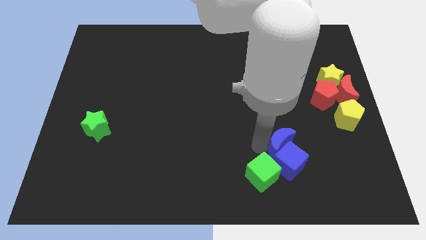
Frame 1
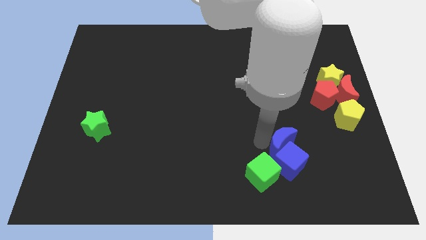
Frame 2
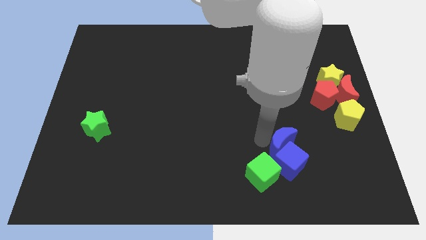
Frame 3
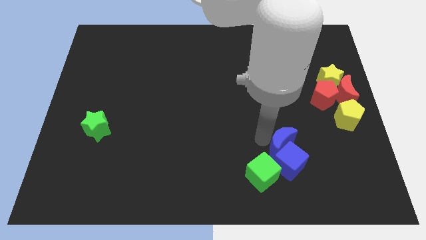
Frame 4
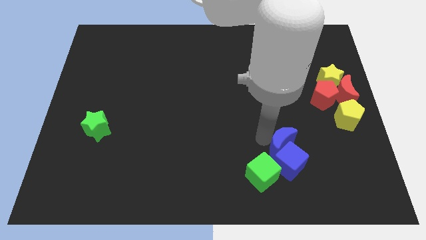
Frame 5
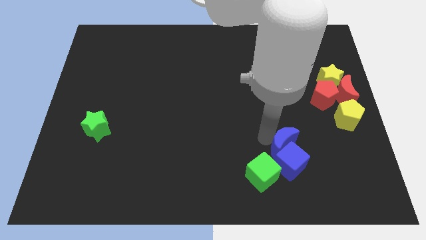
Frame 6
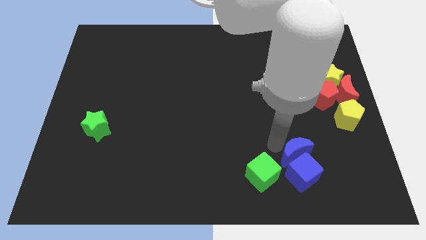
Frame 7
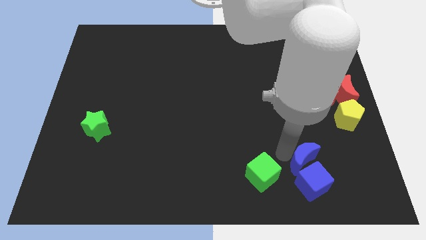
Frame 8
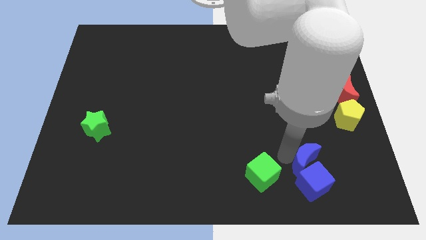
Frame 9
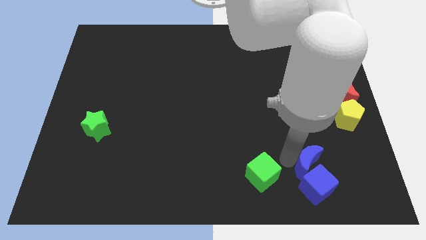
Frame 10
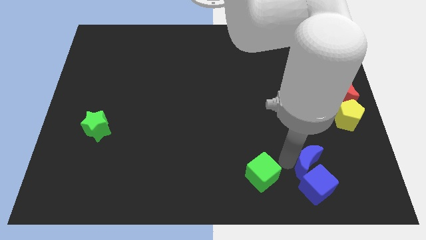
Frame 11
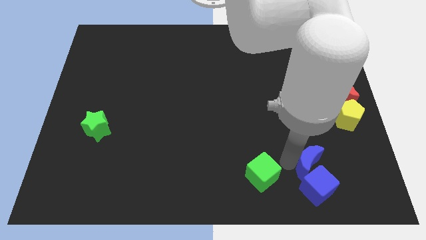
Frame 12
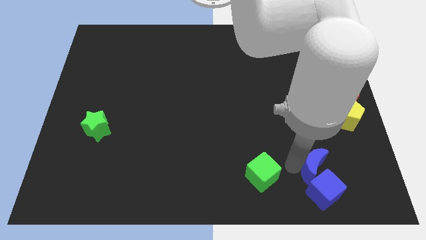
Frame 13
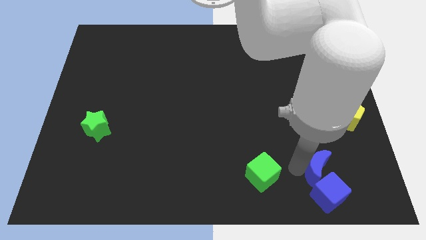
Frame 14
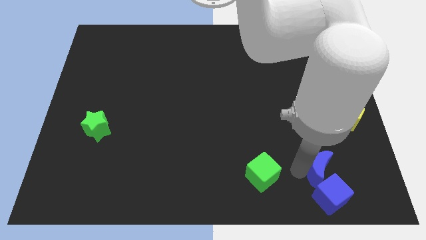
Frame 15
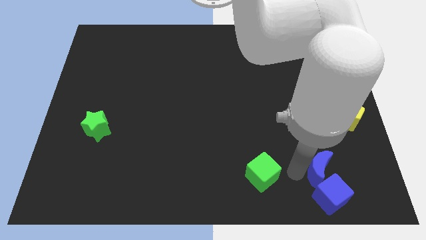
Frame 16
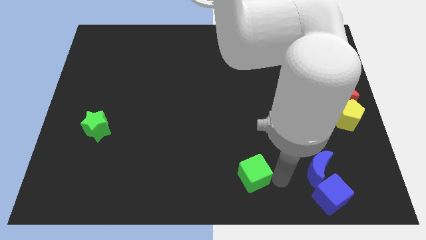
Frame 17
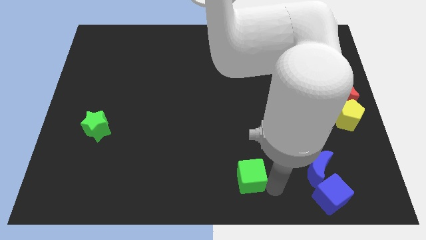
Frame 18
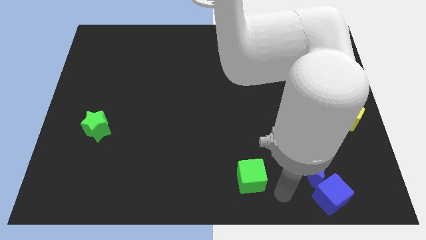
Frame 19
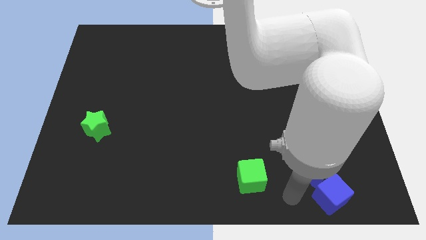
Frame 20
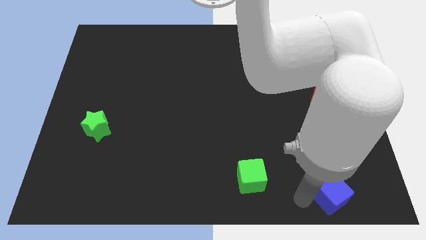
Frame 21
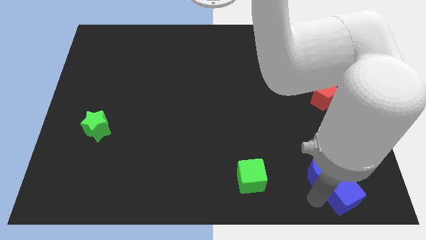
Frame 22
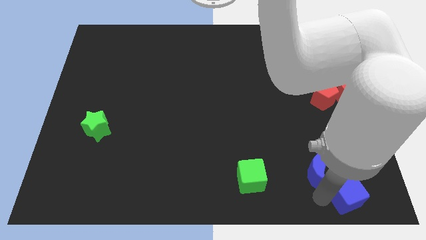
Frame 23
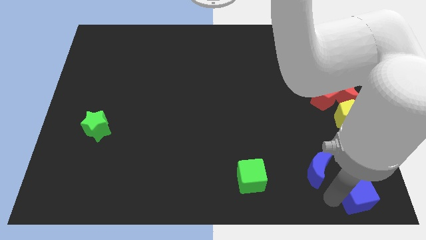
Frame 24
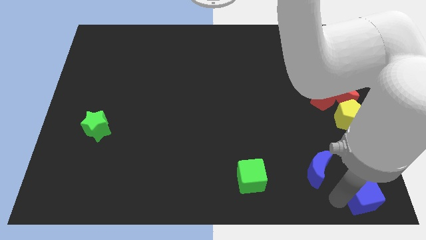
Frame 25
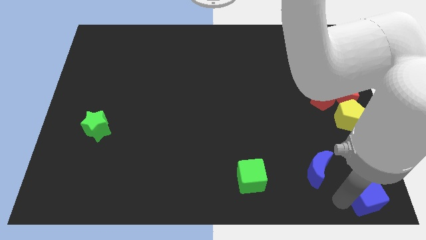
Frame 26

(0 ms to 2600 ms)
separate the blue blocks from green cube

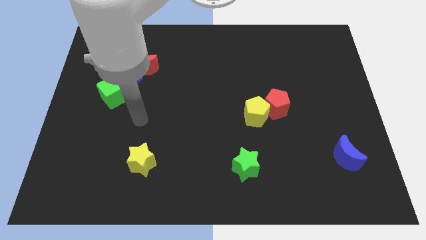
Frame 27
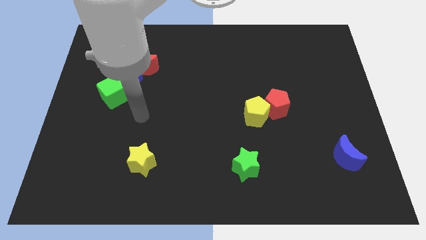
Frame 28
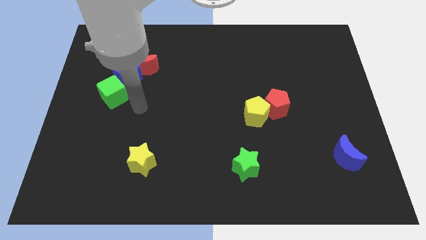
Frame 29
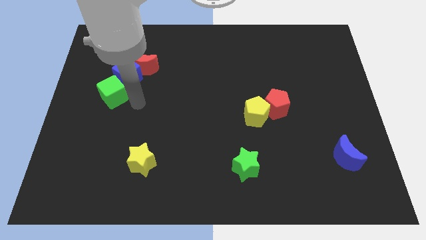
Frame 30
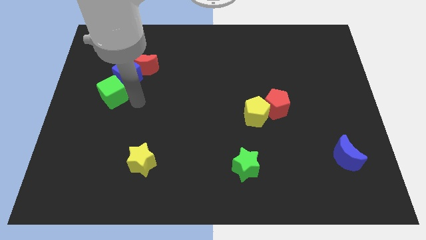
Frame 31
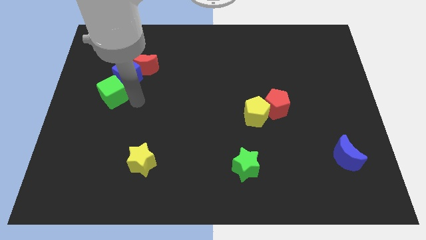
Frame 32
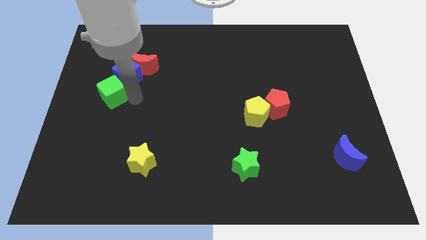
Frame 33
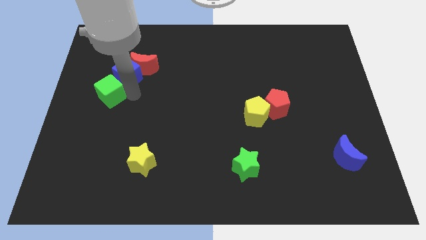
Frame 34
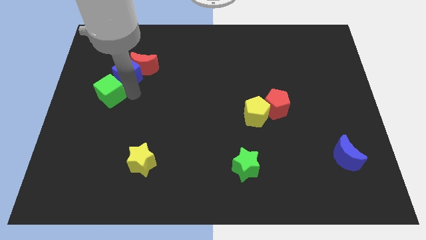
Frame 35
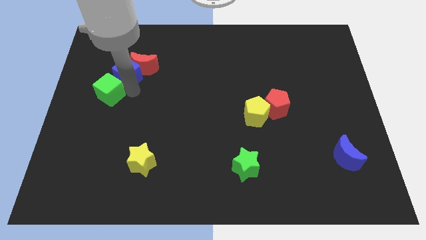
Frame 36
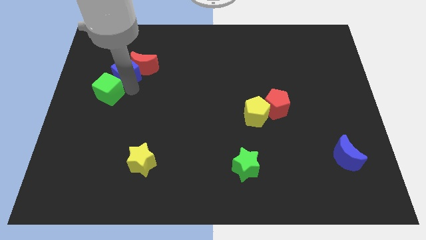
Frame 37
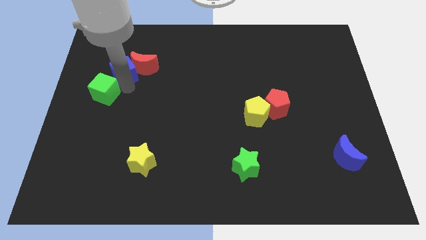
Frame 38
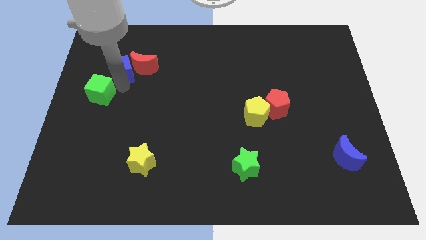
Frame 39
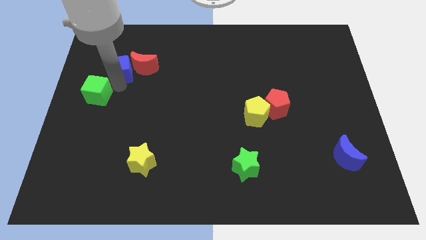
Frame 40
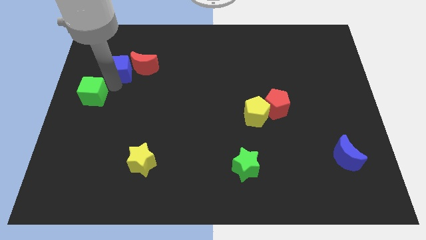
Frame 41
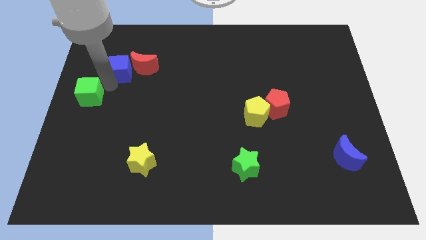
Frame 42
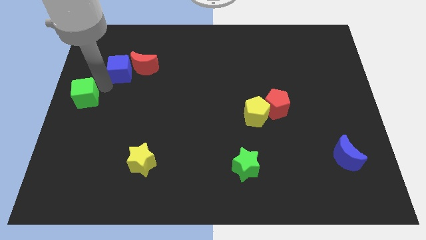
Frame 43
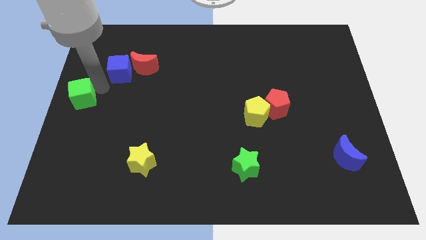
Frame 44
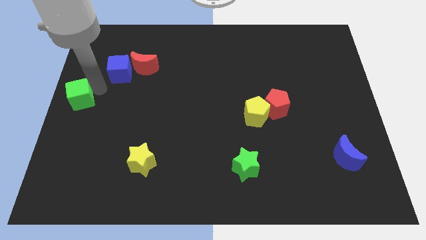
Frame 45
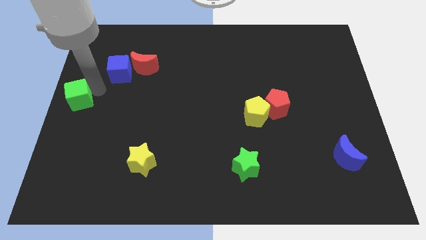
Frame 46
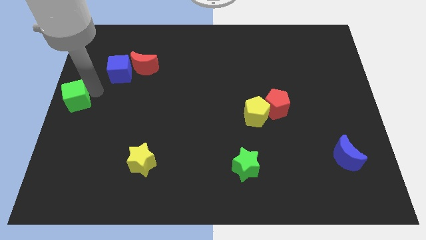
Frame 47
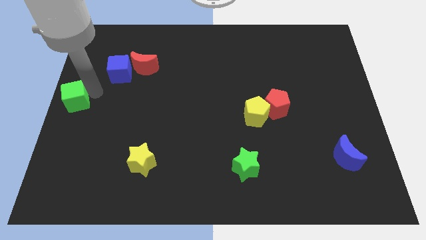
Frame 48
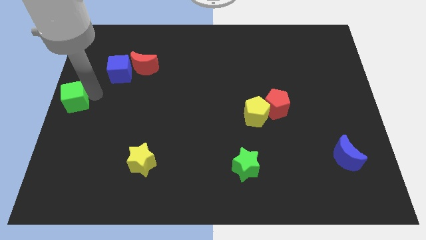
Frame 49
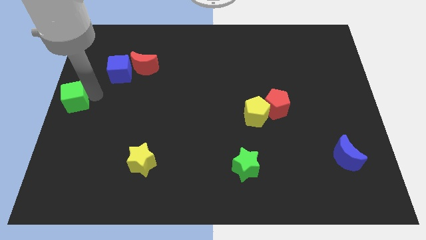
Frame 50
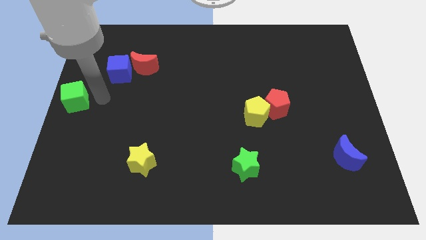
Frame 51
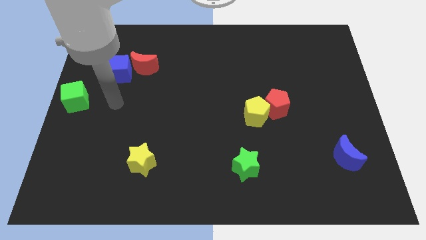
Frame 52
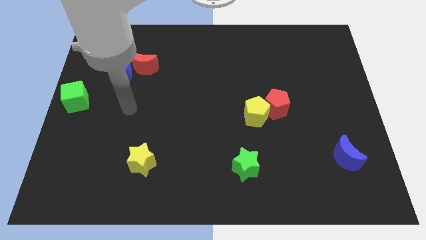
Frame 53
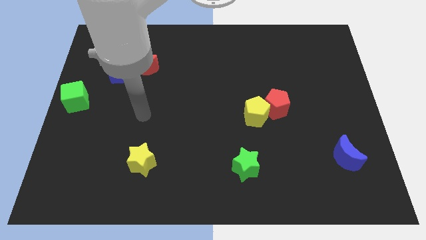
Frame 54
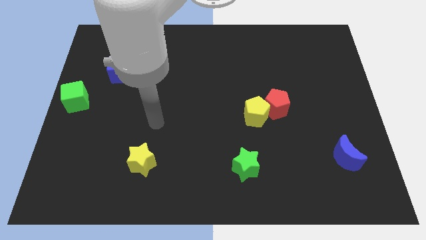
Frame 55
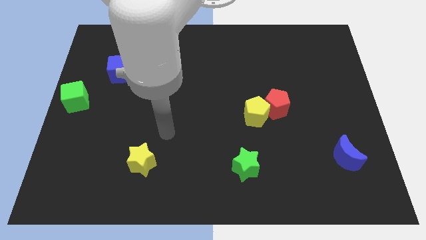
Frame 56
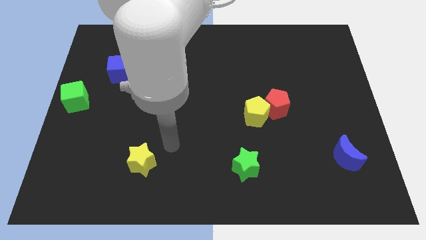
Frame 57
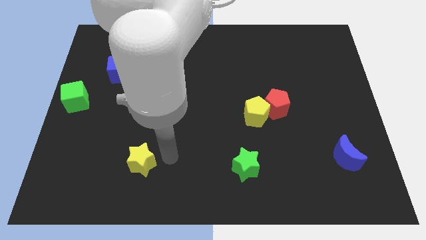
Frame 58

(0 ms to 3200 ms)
separate the green cube from the blue cube

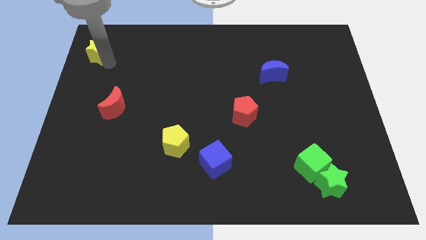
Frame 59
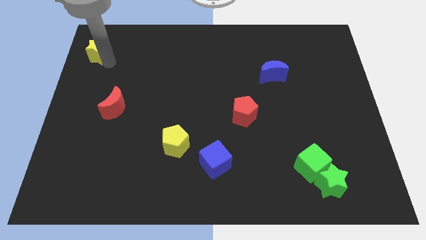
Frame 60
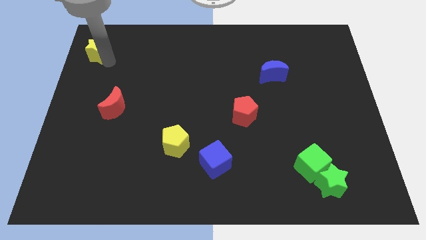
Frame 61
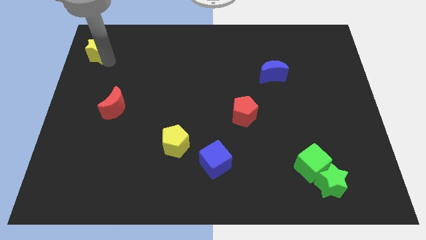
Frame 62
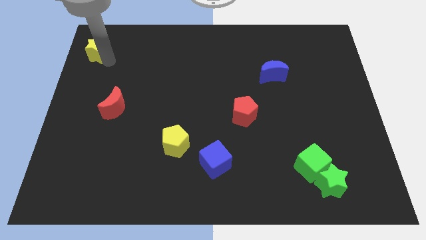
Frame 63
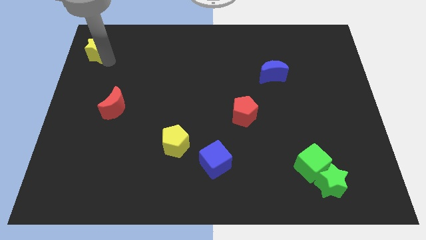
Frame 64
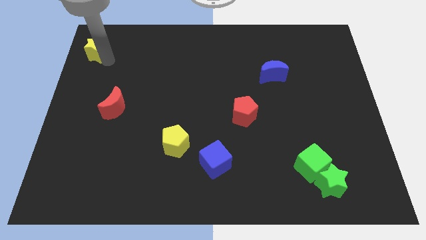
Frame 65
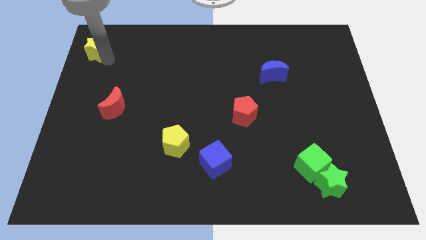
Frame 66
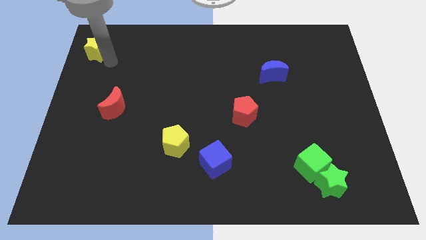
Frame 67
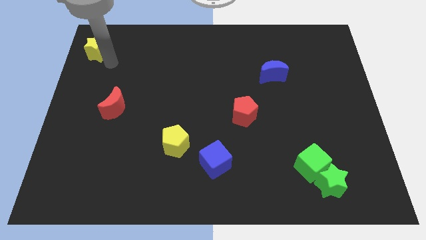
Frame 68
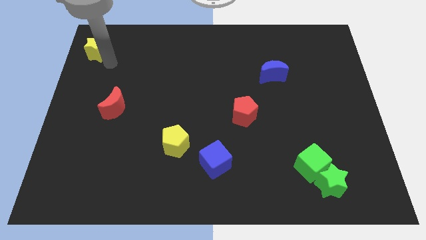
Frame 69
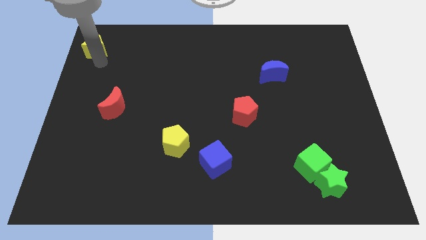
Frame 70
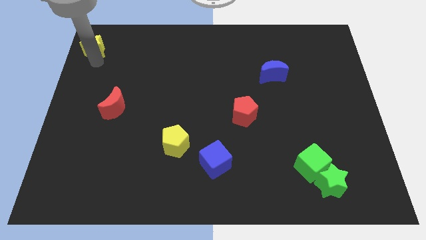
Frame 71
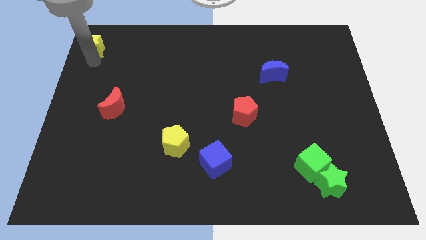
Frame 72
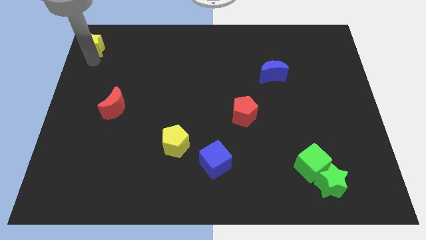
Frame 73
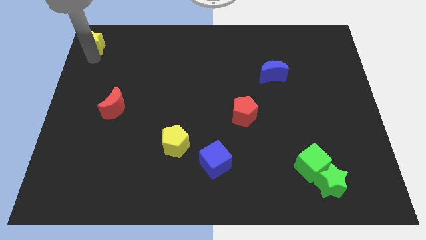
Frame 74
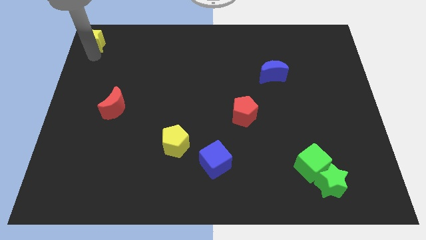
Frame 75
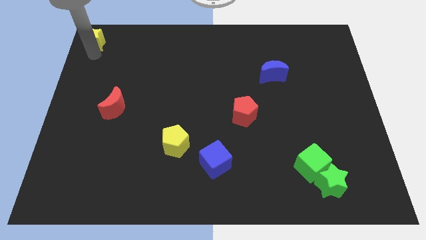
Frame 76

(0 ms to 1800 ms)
move the yellow star to the top left

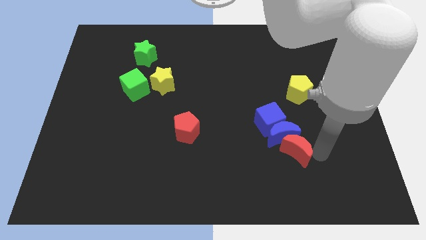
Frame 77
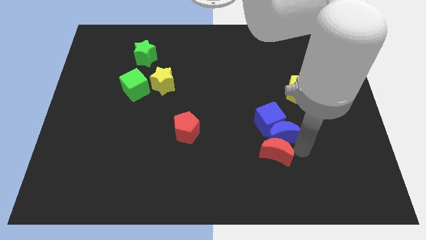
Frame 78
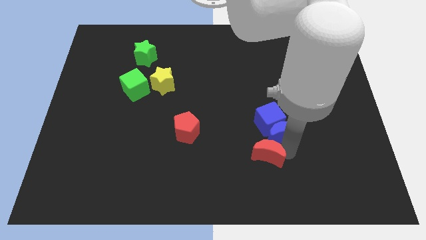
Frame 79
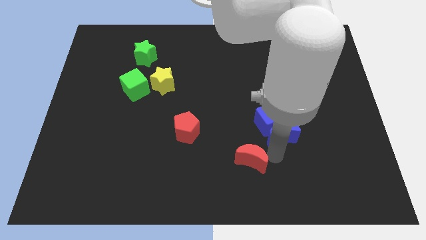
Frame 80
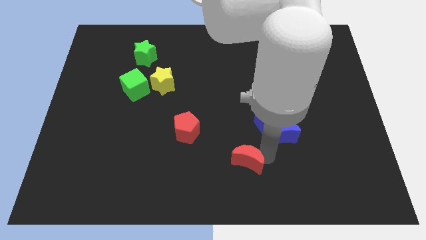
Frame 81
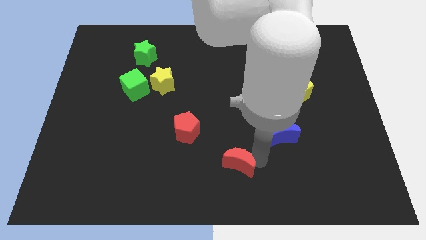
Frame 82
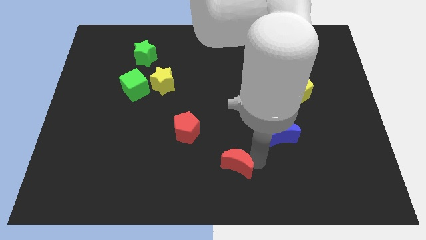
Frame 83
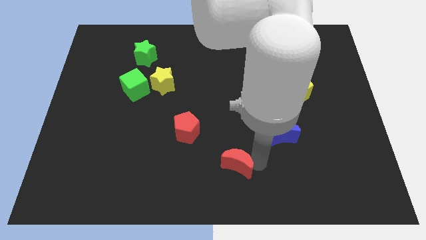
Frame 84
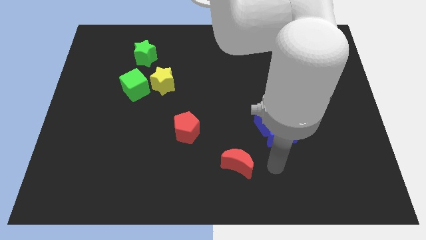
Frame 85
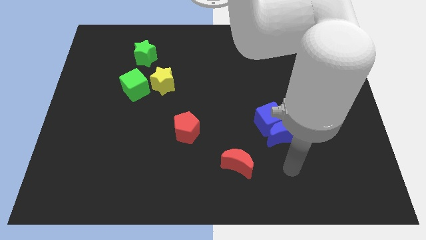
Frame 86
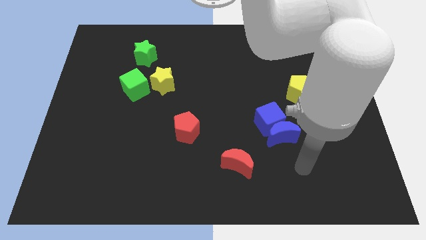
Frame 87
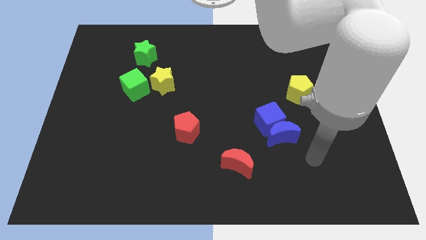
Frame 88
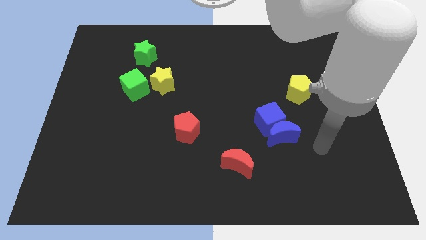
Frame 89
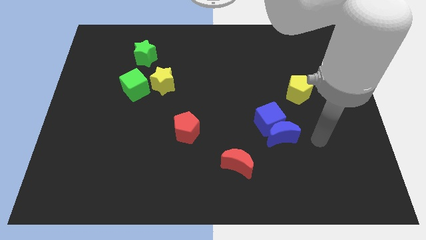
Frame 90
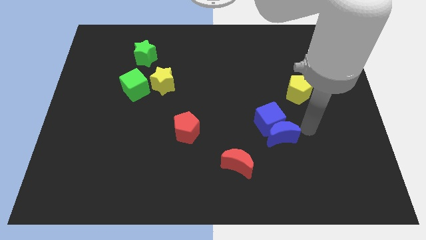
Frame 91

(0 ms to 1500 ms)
push red crescent to the bottom of the board

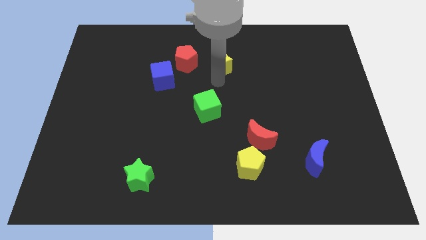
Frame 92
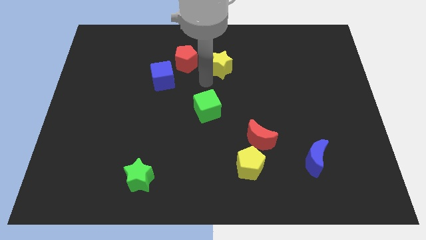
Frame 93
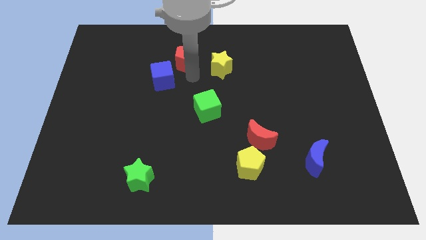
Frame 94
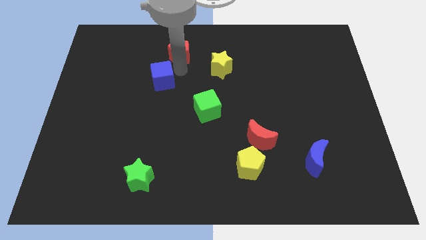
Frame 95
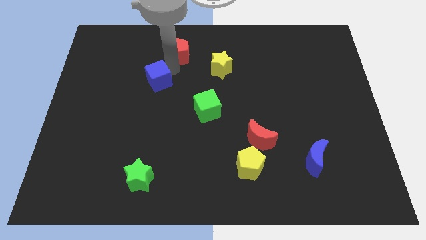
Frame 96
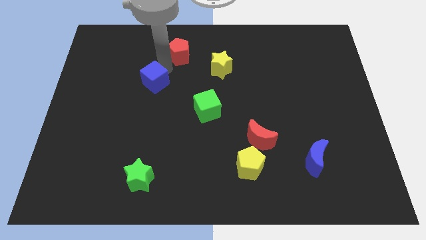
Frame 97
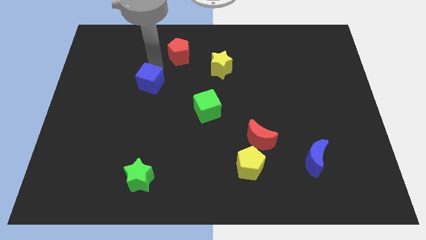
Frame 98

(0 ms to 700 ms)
move your arm away from the yellow star
